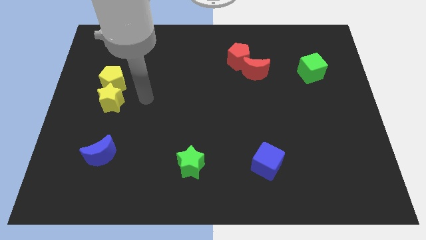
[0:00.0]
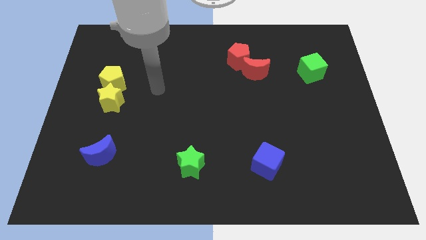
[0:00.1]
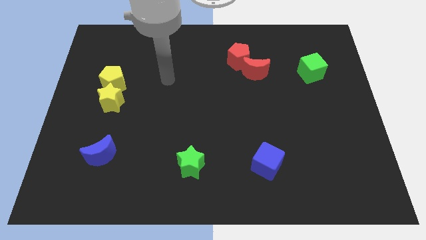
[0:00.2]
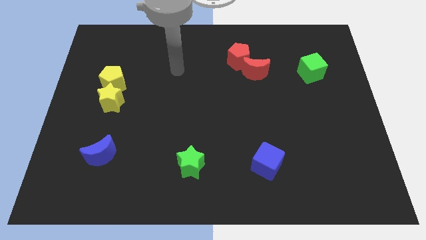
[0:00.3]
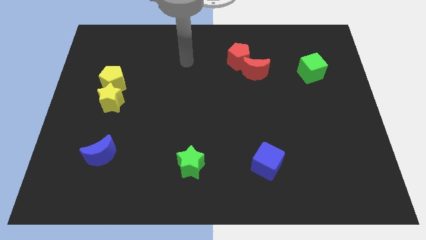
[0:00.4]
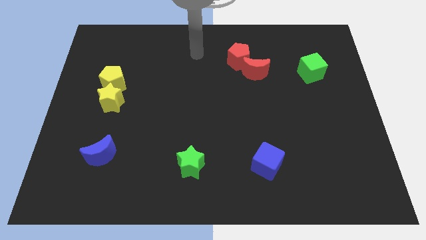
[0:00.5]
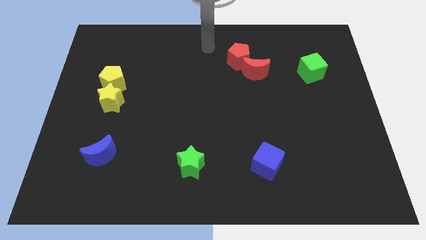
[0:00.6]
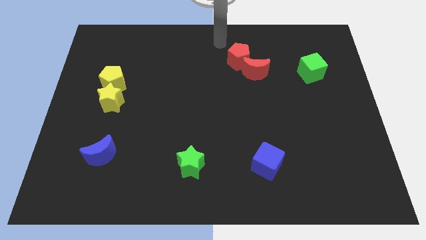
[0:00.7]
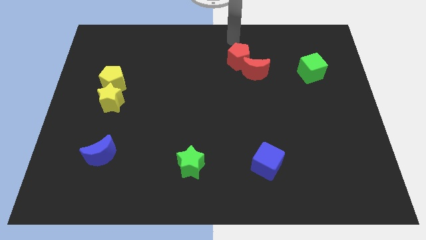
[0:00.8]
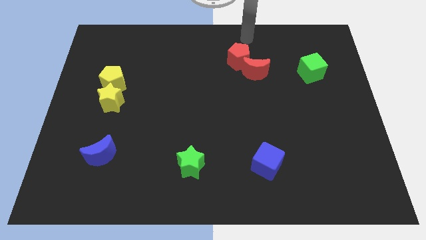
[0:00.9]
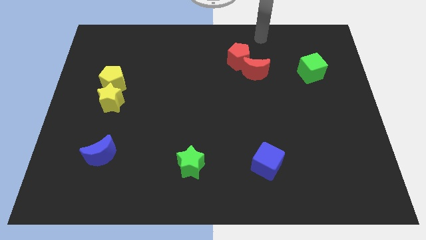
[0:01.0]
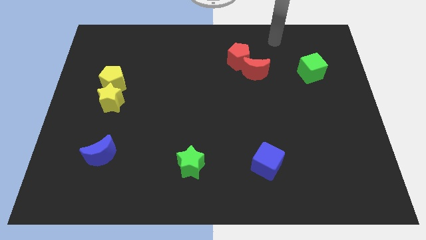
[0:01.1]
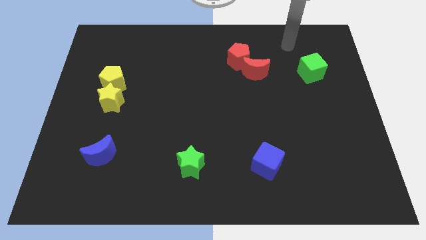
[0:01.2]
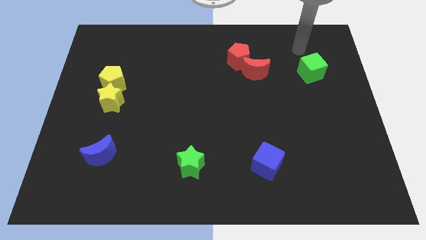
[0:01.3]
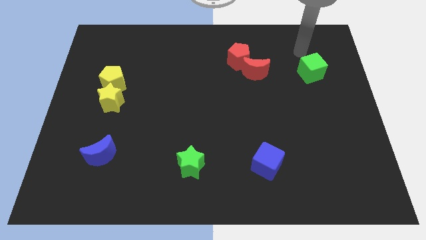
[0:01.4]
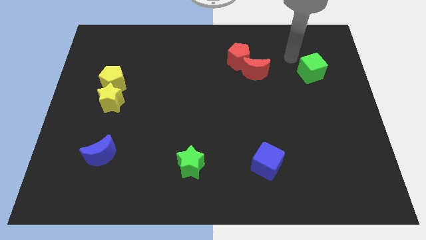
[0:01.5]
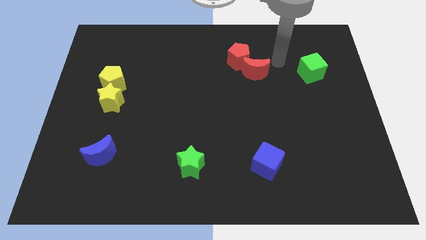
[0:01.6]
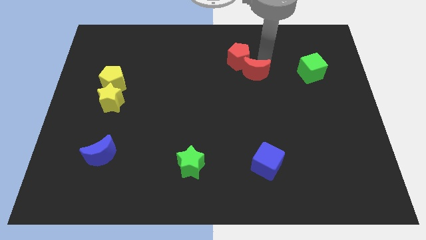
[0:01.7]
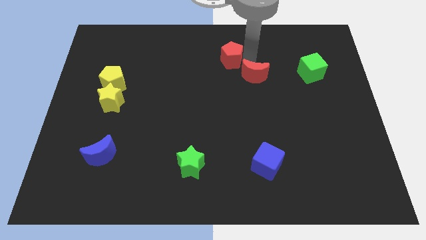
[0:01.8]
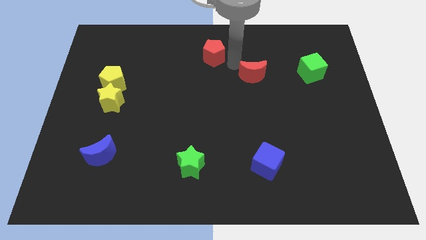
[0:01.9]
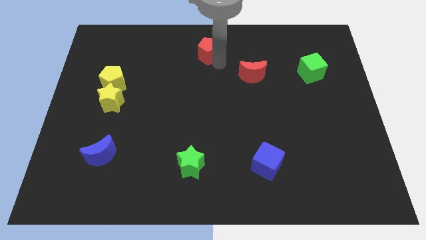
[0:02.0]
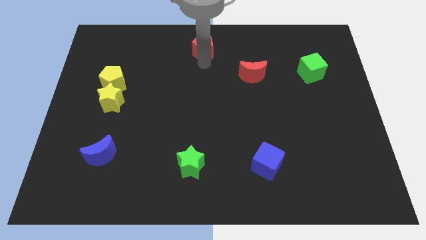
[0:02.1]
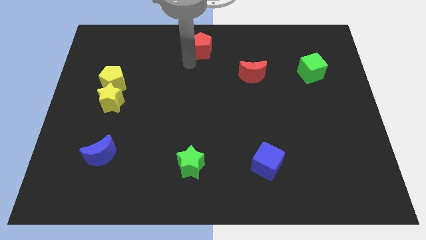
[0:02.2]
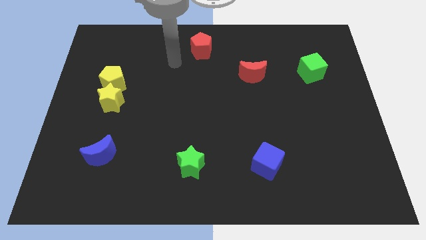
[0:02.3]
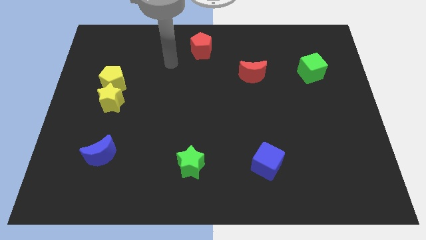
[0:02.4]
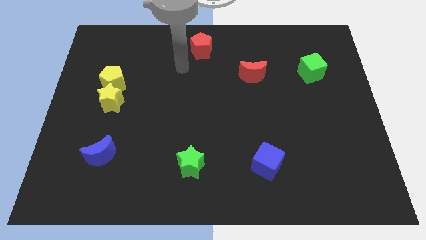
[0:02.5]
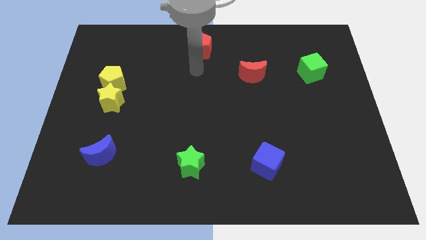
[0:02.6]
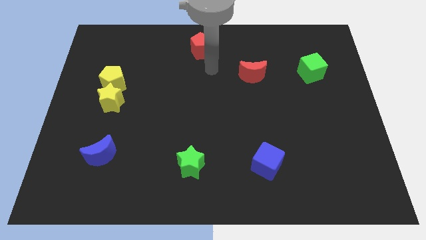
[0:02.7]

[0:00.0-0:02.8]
separate the red pentagon and red moon

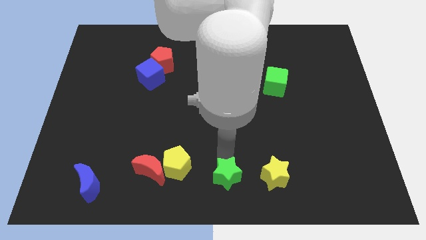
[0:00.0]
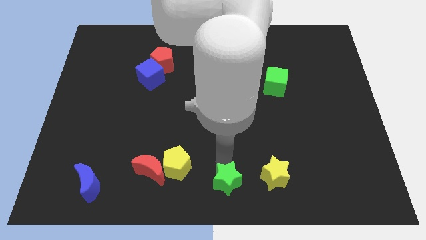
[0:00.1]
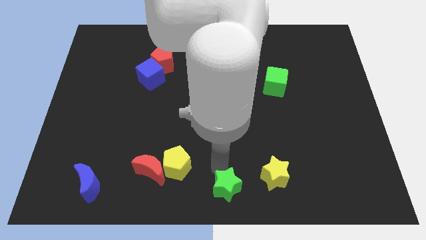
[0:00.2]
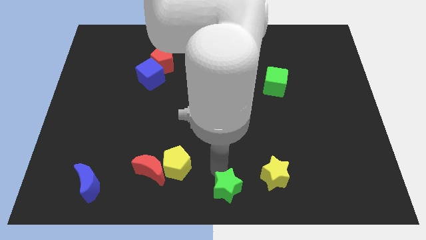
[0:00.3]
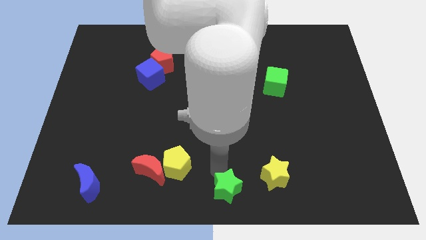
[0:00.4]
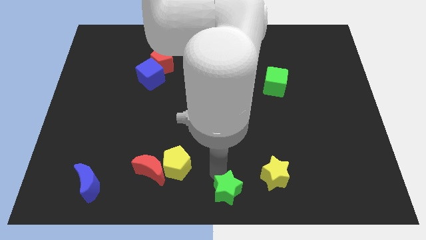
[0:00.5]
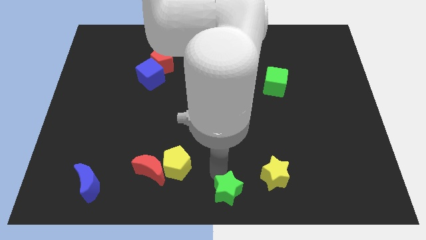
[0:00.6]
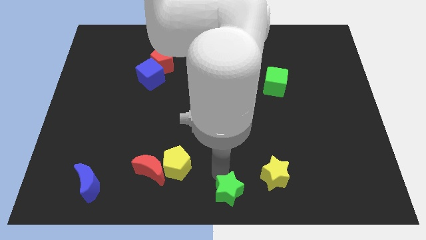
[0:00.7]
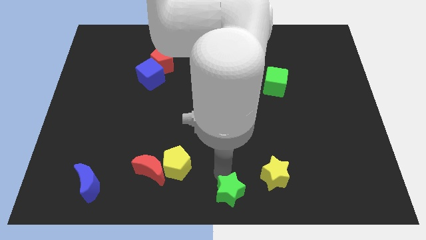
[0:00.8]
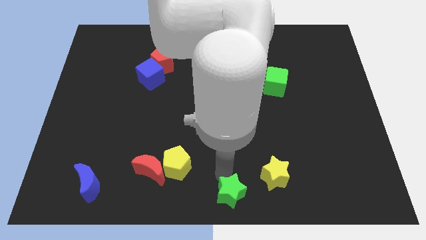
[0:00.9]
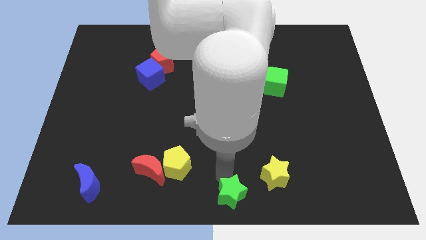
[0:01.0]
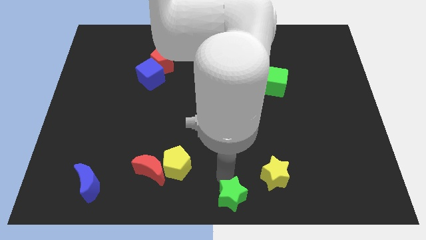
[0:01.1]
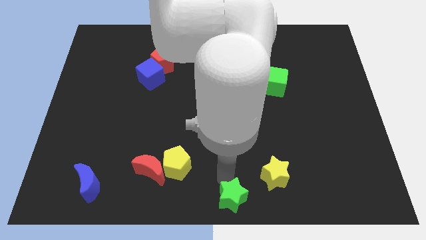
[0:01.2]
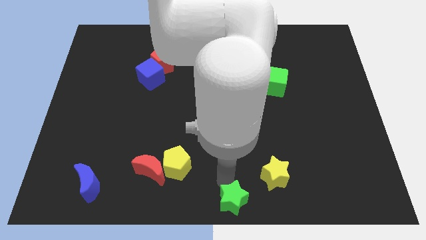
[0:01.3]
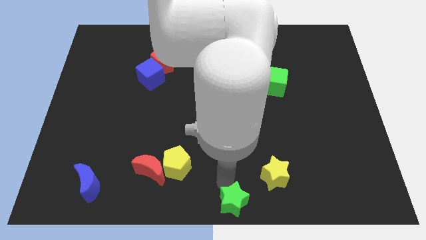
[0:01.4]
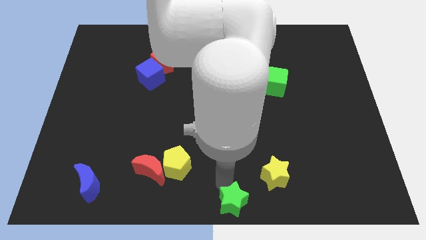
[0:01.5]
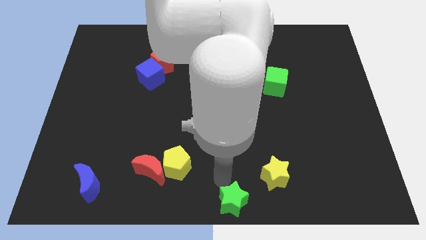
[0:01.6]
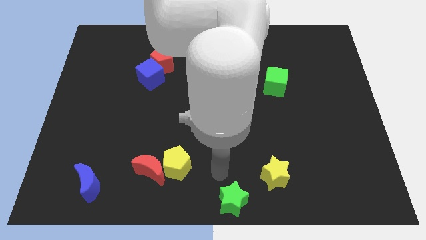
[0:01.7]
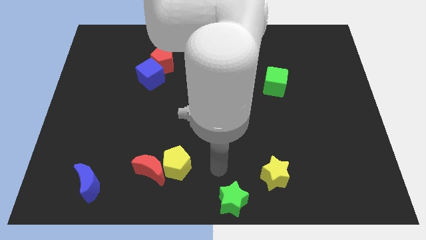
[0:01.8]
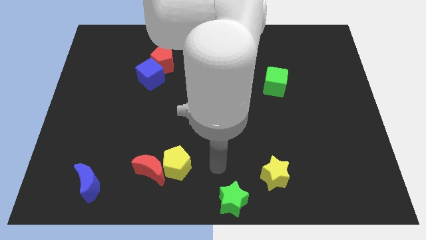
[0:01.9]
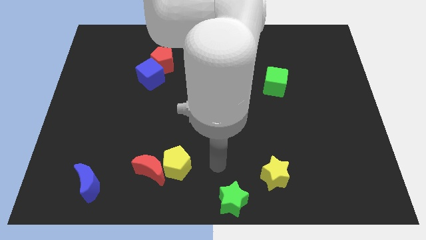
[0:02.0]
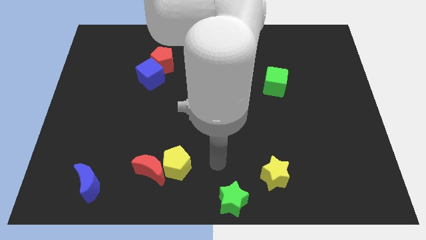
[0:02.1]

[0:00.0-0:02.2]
push the green star at the bottom center of the board

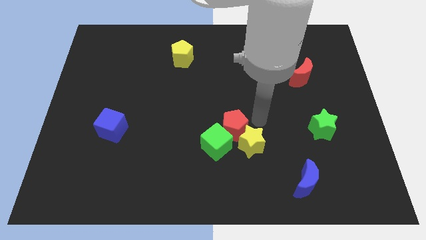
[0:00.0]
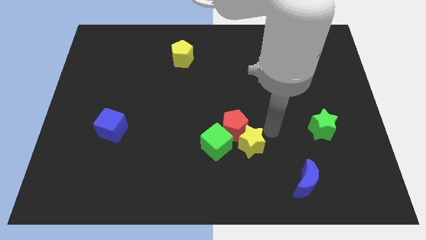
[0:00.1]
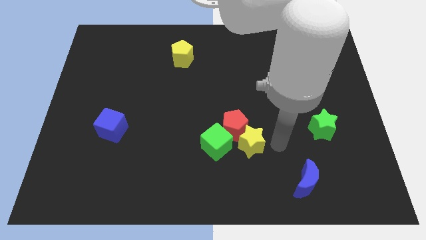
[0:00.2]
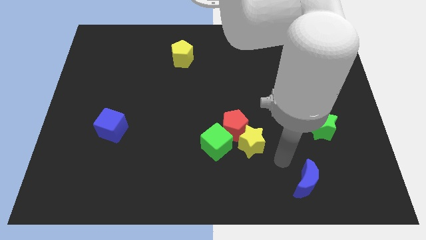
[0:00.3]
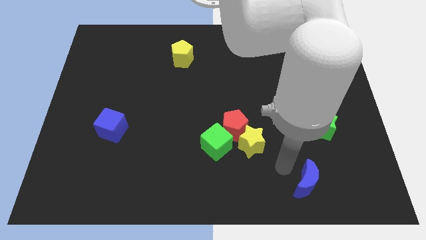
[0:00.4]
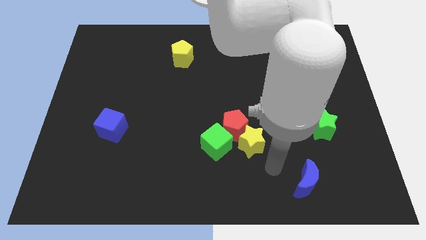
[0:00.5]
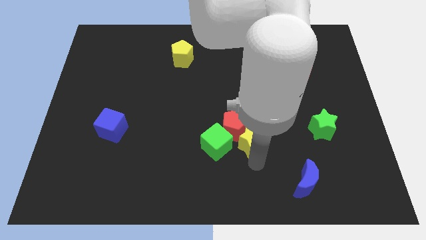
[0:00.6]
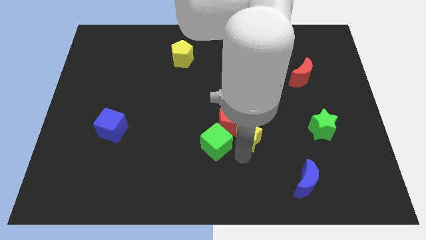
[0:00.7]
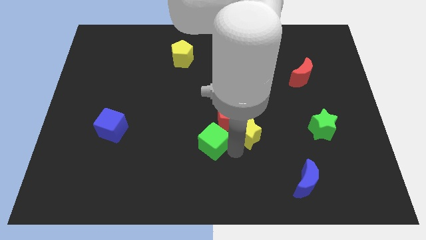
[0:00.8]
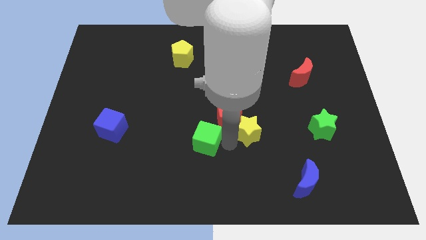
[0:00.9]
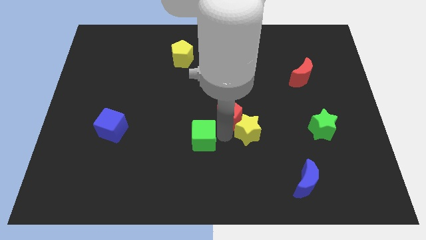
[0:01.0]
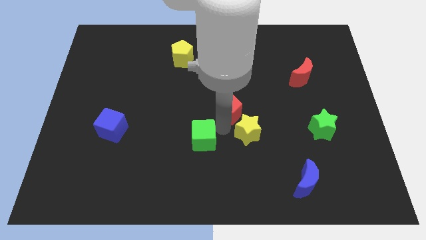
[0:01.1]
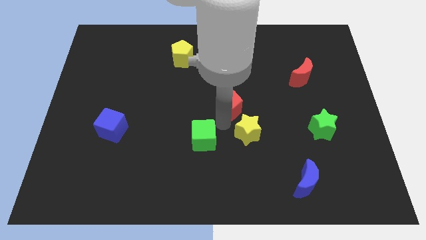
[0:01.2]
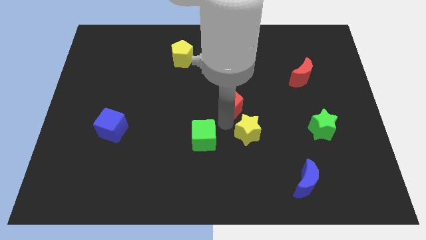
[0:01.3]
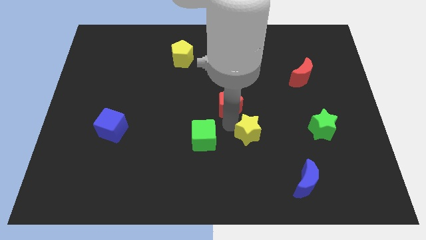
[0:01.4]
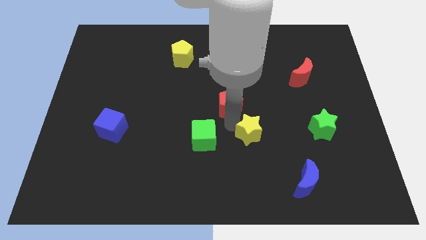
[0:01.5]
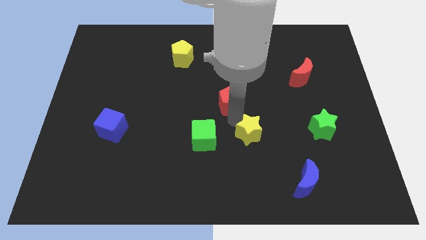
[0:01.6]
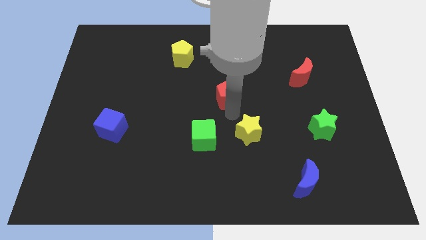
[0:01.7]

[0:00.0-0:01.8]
separate the red pentagon from the green cube and the yellow star

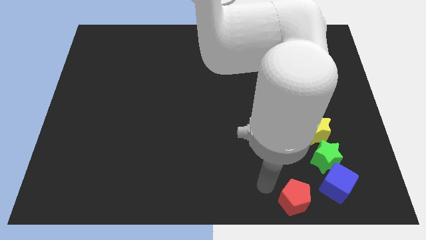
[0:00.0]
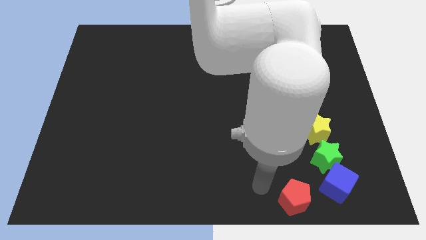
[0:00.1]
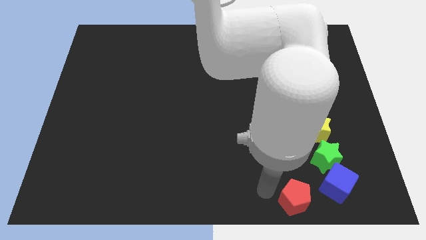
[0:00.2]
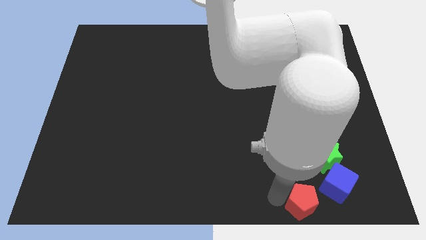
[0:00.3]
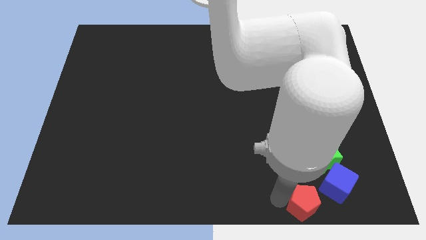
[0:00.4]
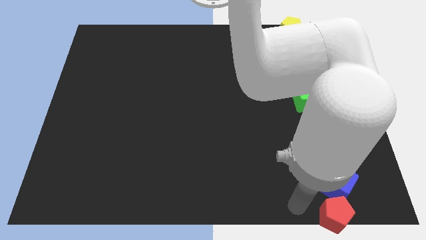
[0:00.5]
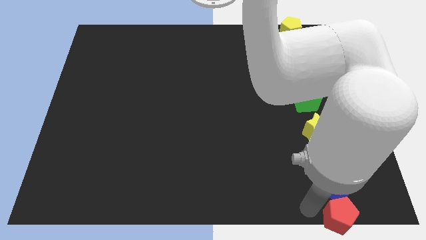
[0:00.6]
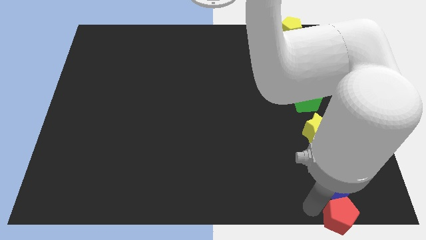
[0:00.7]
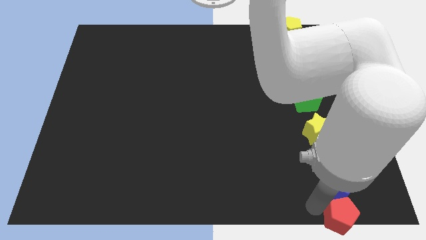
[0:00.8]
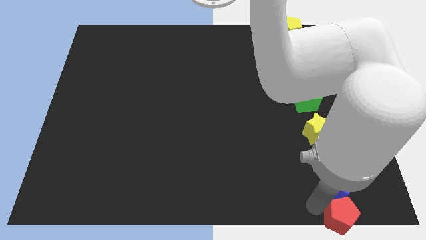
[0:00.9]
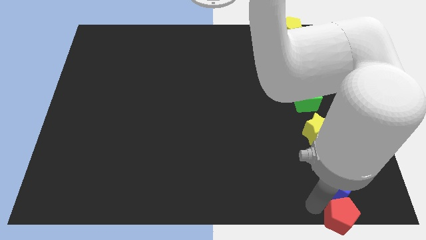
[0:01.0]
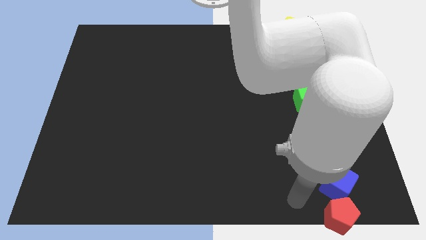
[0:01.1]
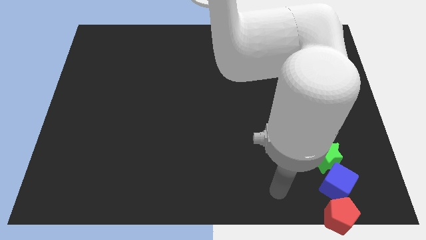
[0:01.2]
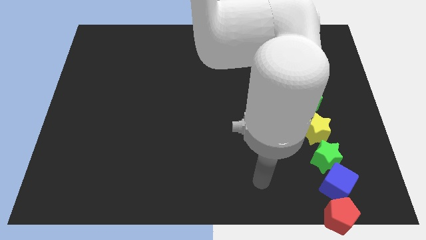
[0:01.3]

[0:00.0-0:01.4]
place red pentagon to the bottom side of the blue cube

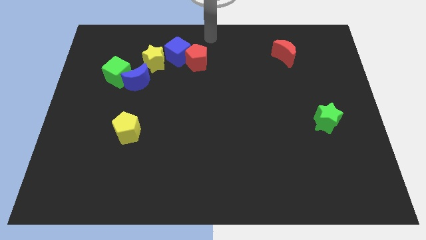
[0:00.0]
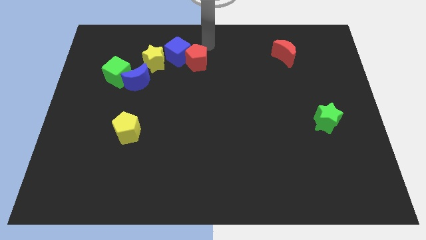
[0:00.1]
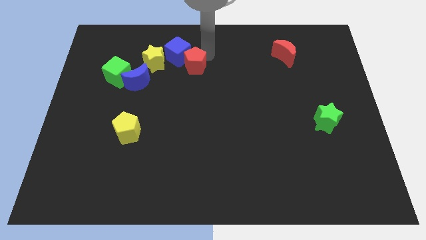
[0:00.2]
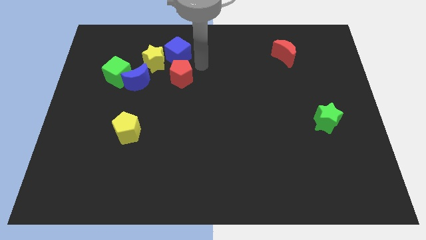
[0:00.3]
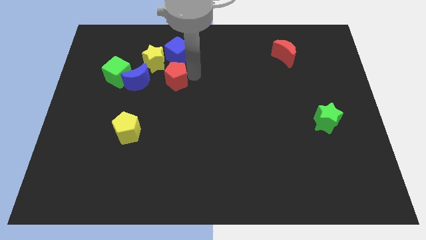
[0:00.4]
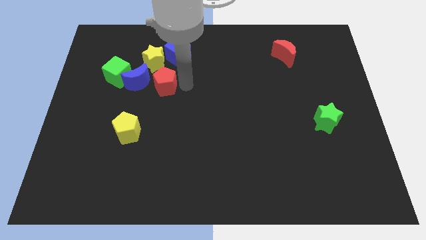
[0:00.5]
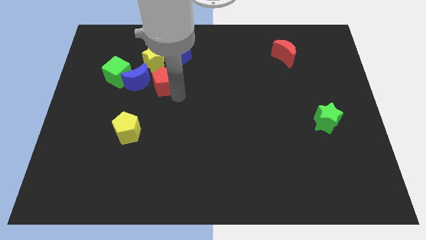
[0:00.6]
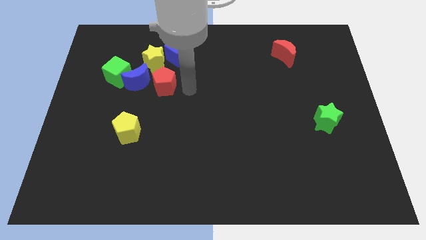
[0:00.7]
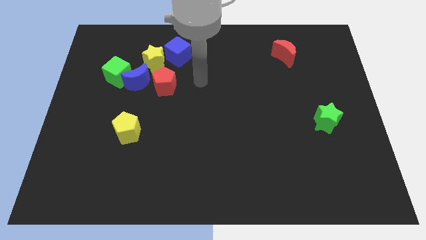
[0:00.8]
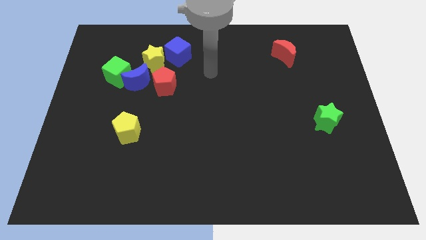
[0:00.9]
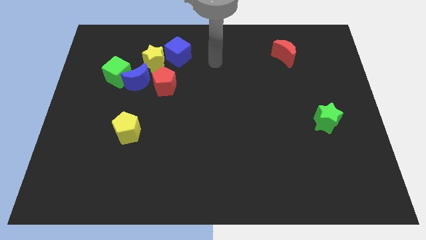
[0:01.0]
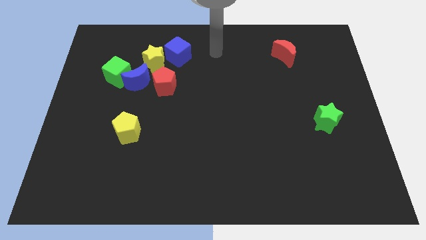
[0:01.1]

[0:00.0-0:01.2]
place the red pentagon right to the blue moon
